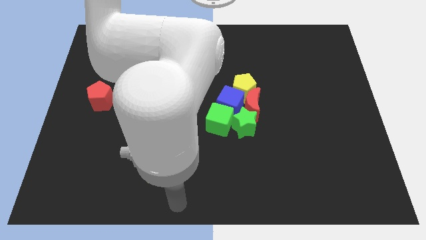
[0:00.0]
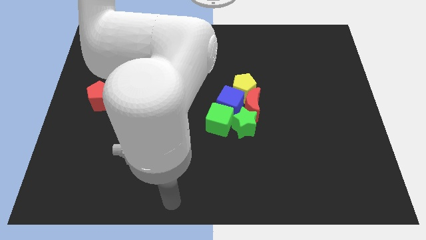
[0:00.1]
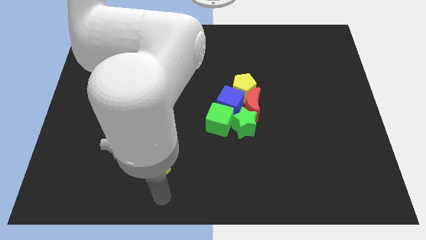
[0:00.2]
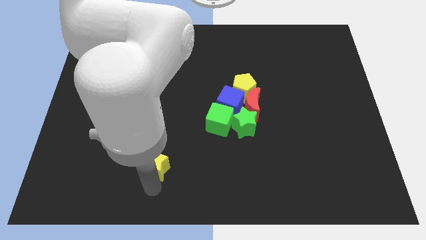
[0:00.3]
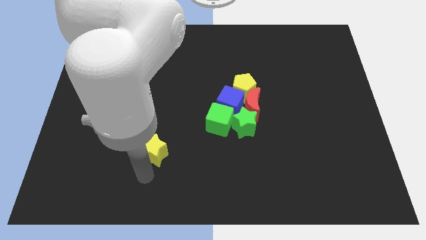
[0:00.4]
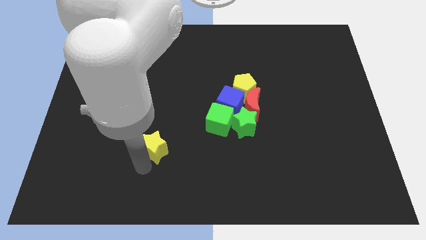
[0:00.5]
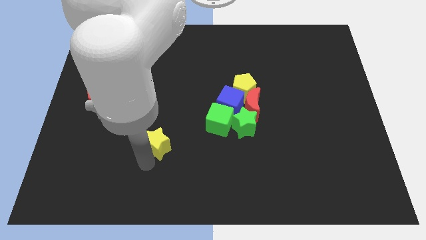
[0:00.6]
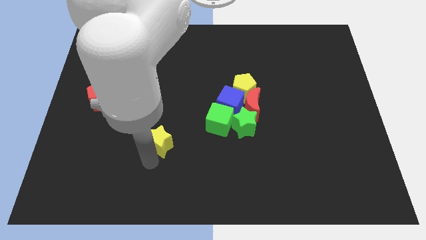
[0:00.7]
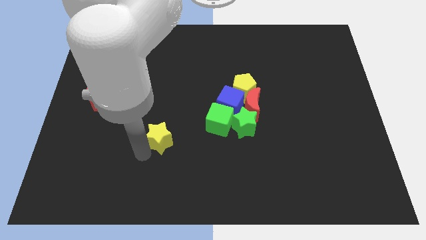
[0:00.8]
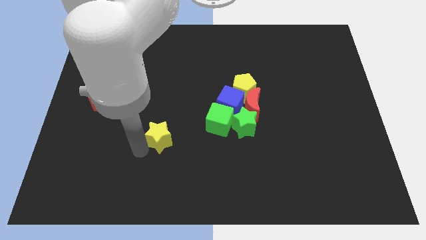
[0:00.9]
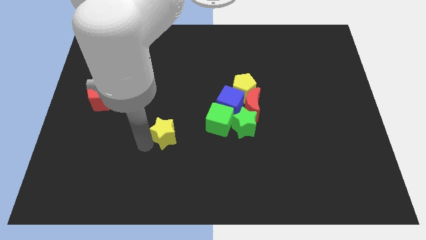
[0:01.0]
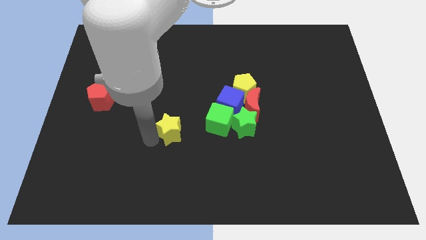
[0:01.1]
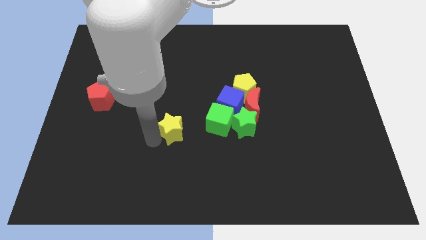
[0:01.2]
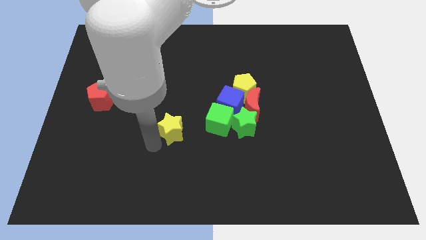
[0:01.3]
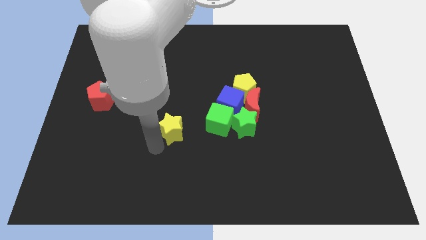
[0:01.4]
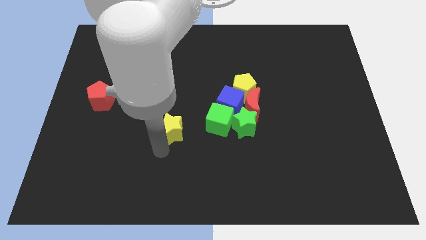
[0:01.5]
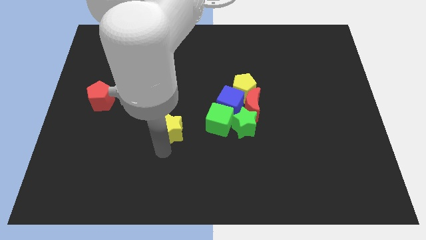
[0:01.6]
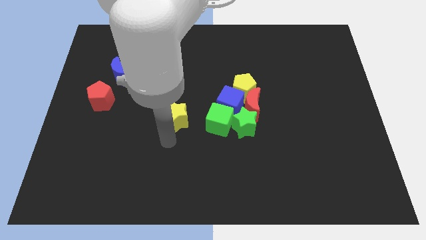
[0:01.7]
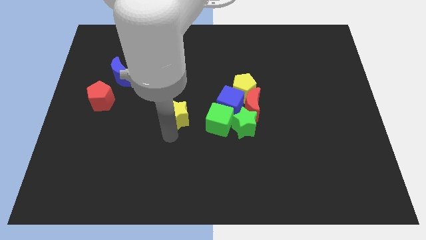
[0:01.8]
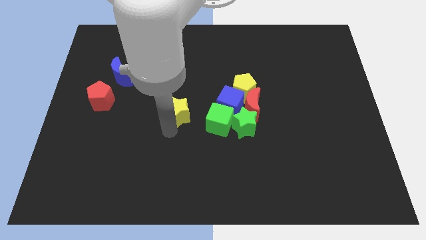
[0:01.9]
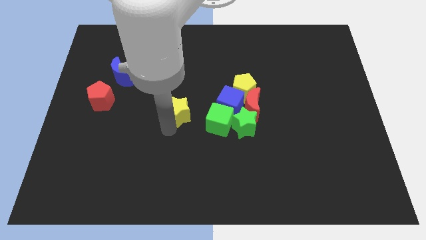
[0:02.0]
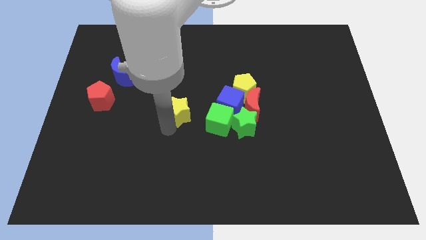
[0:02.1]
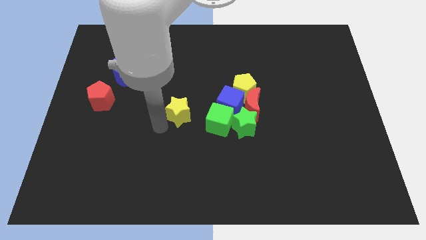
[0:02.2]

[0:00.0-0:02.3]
move yellow star to the center of the board

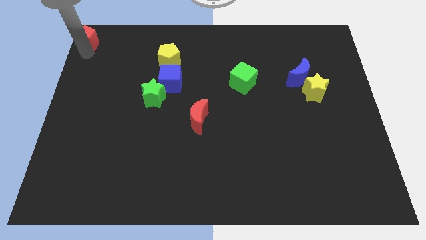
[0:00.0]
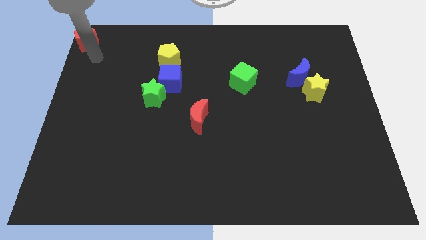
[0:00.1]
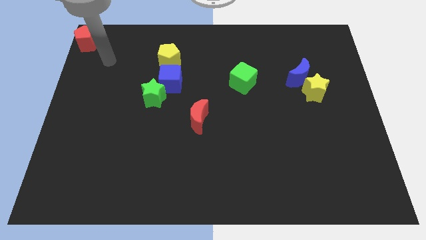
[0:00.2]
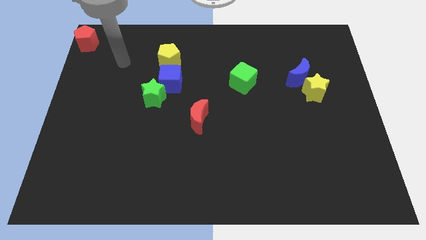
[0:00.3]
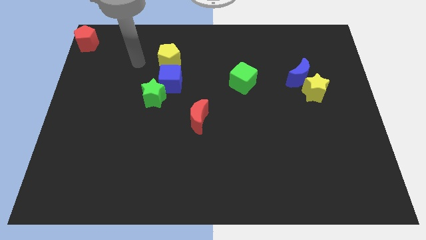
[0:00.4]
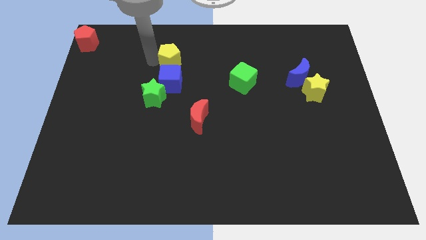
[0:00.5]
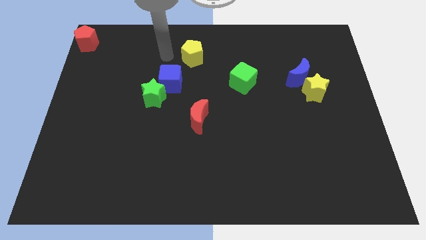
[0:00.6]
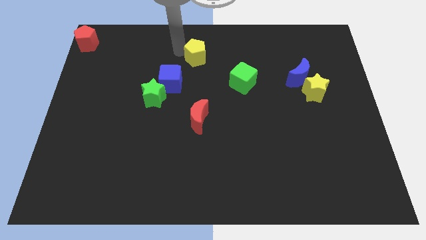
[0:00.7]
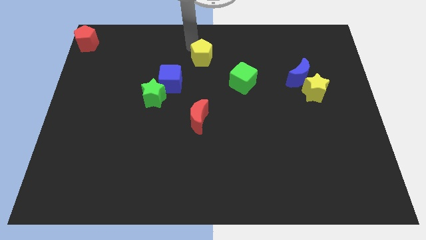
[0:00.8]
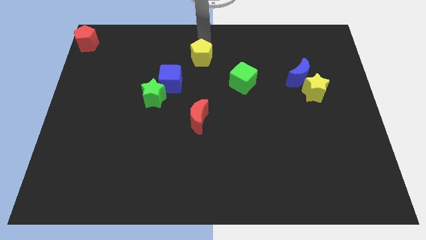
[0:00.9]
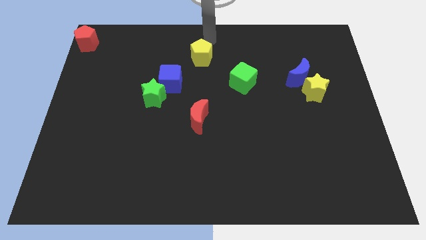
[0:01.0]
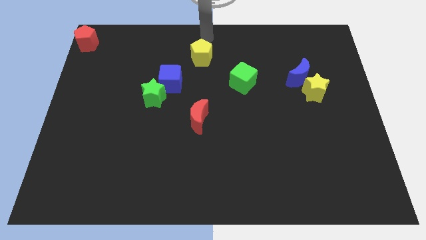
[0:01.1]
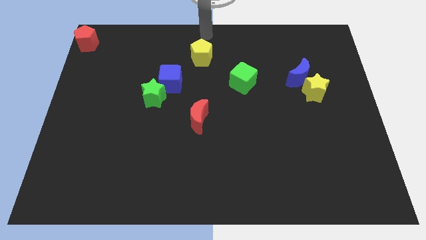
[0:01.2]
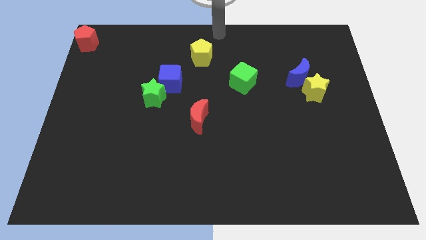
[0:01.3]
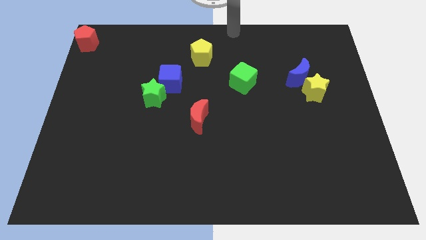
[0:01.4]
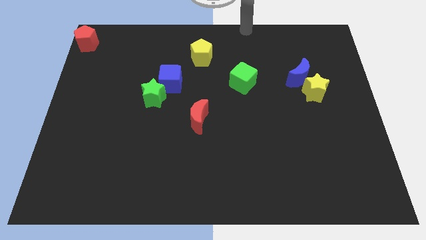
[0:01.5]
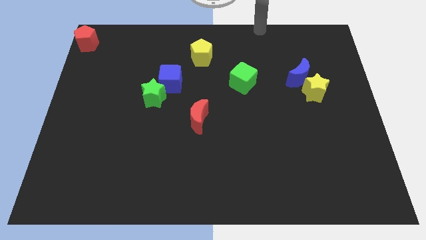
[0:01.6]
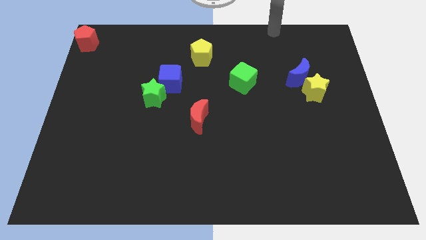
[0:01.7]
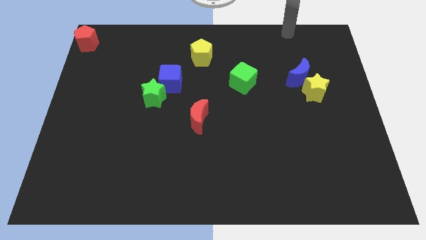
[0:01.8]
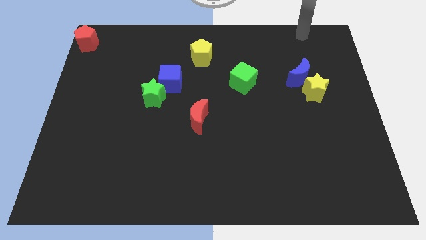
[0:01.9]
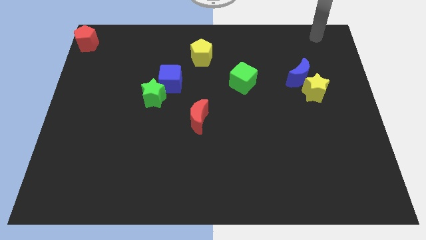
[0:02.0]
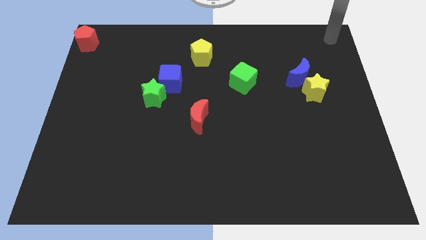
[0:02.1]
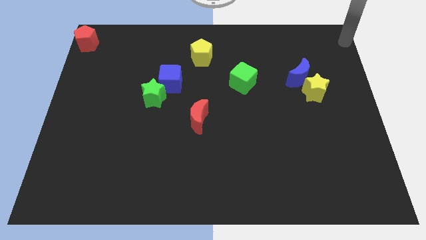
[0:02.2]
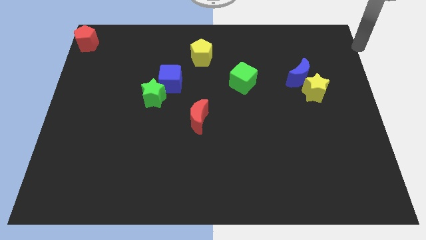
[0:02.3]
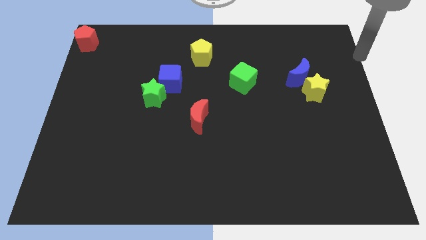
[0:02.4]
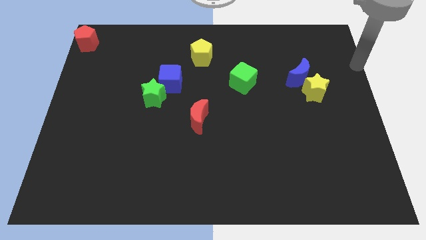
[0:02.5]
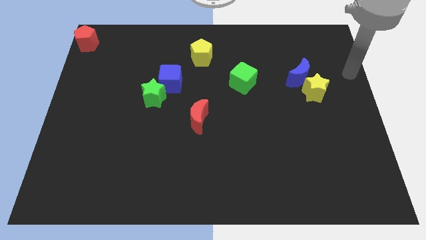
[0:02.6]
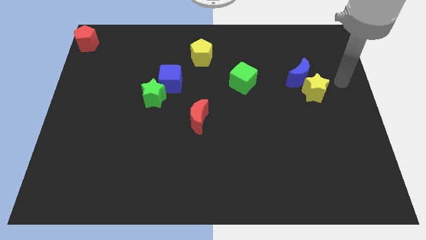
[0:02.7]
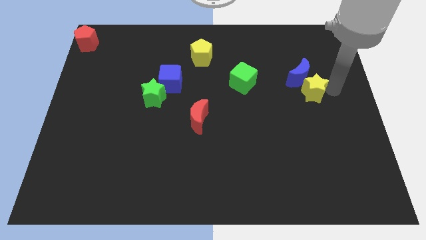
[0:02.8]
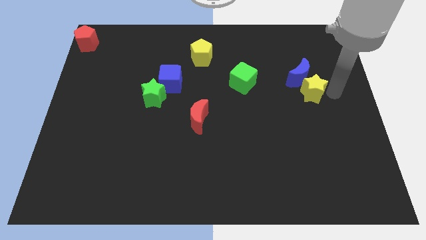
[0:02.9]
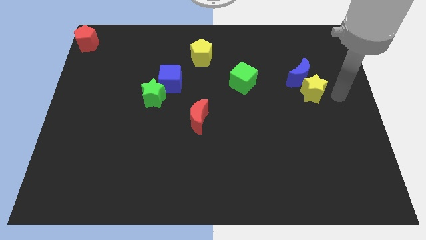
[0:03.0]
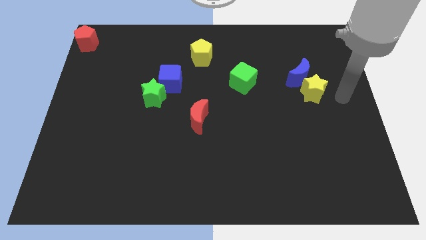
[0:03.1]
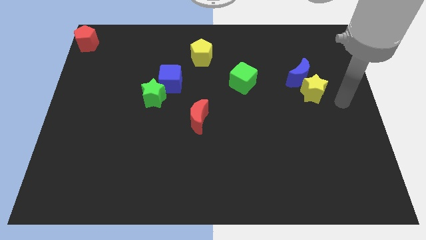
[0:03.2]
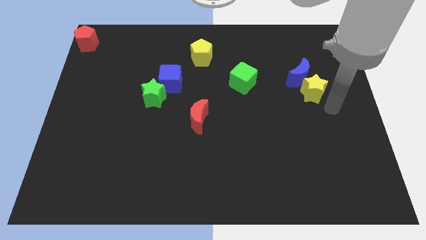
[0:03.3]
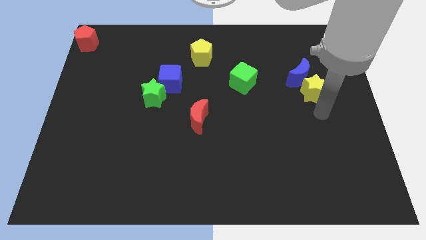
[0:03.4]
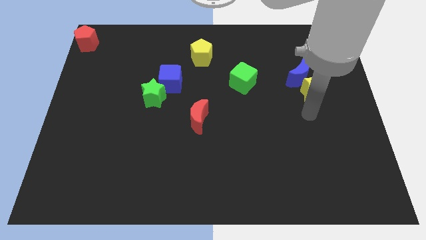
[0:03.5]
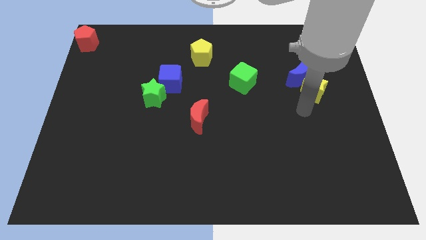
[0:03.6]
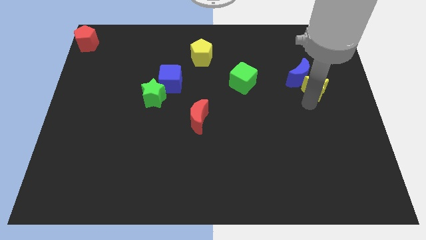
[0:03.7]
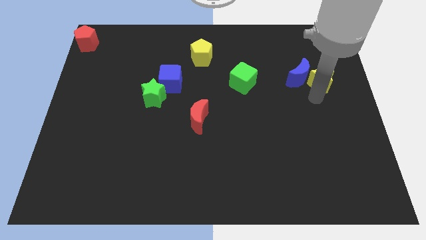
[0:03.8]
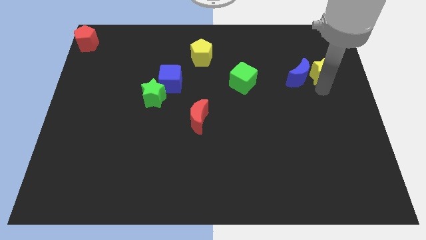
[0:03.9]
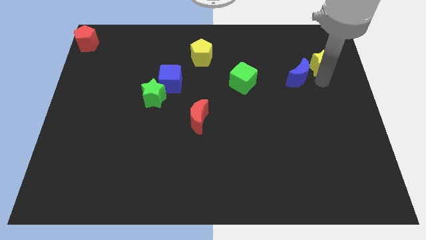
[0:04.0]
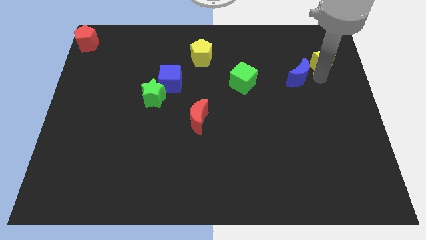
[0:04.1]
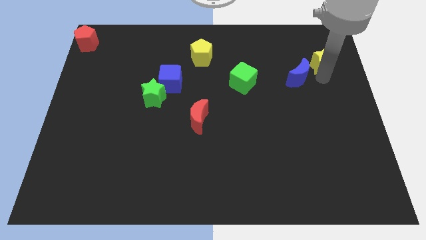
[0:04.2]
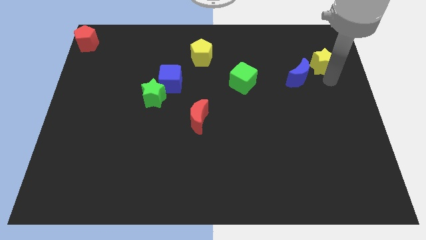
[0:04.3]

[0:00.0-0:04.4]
point the arm at the bottom of yellow star

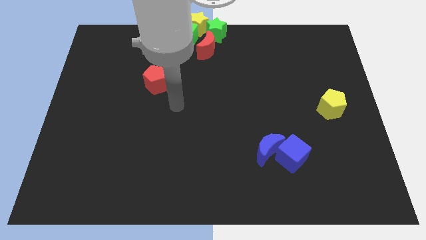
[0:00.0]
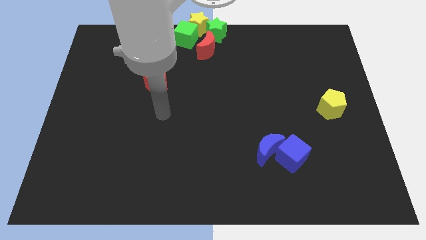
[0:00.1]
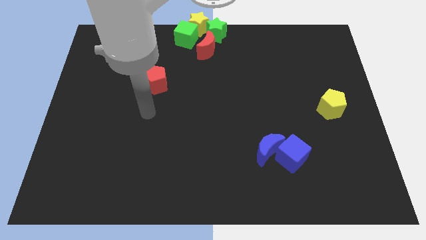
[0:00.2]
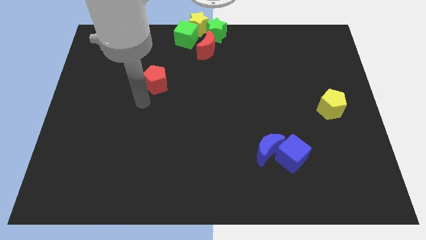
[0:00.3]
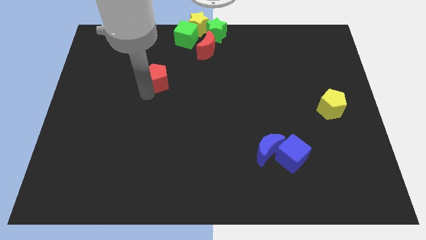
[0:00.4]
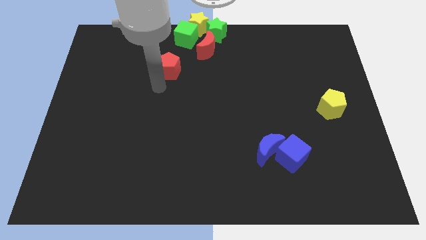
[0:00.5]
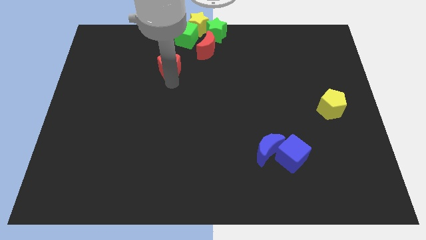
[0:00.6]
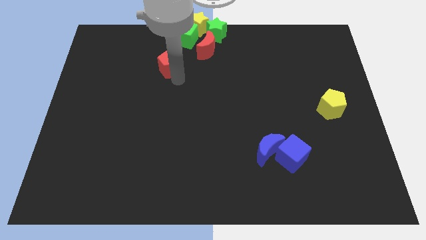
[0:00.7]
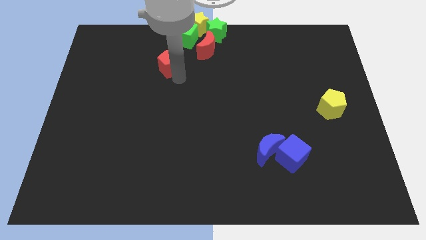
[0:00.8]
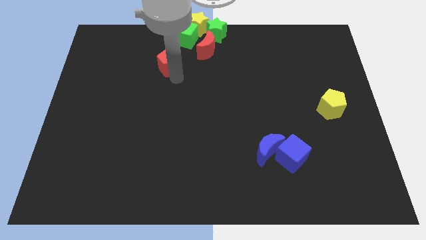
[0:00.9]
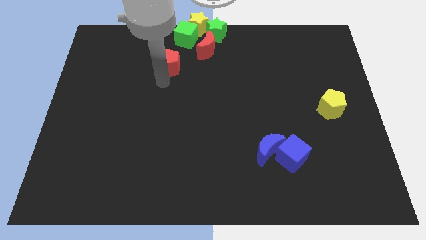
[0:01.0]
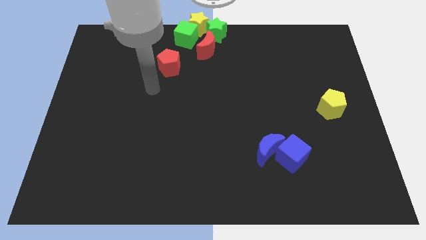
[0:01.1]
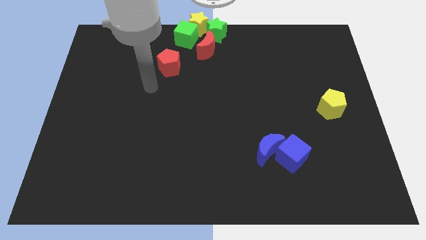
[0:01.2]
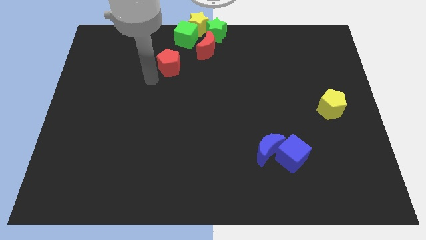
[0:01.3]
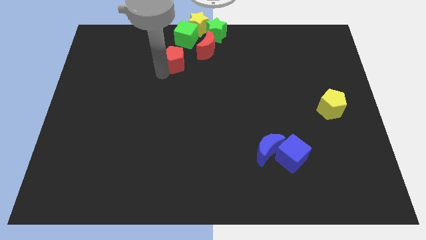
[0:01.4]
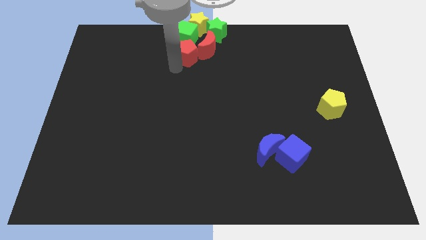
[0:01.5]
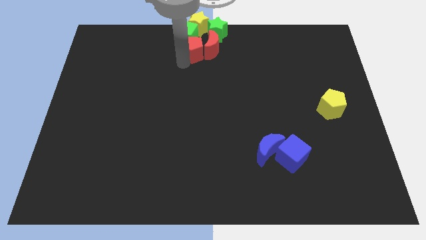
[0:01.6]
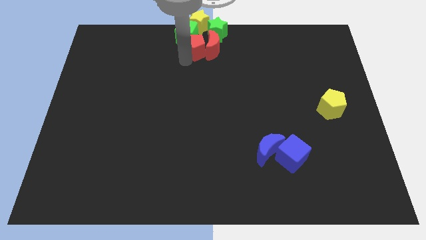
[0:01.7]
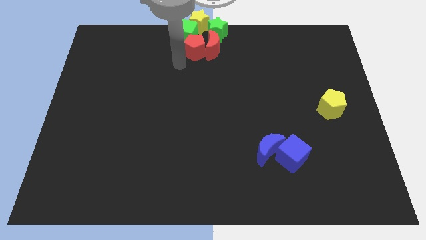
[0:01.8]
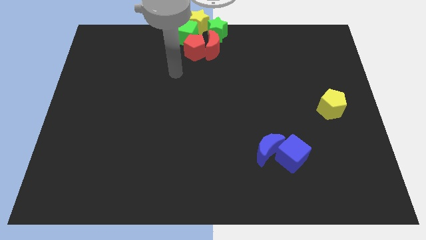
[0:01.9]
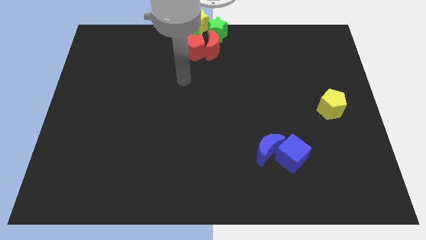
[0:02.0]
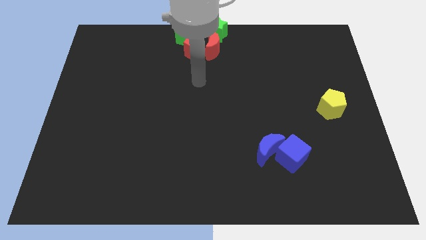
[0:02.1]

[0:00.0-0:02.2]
push the red pentagon into the group of blocks at top center
